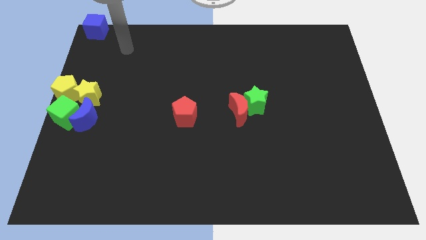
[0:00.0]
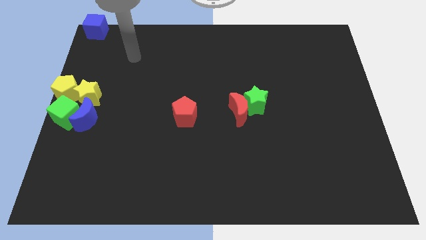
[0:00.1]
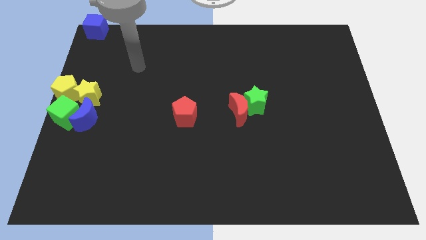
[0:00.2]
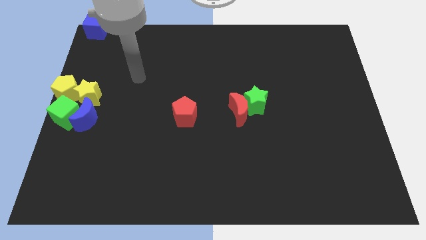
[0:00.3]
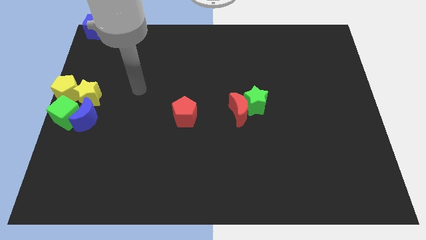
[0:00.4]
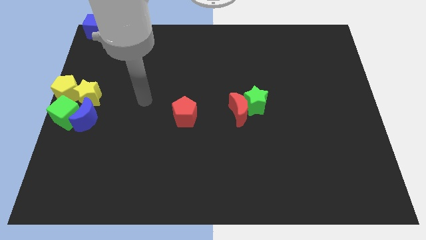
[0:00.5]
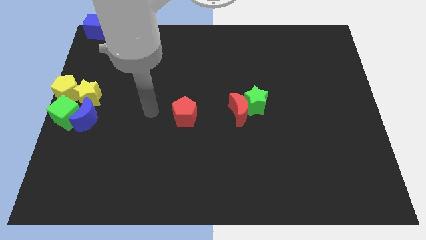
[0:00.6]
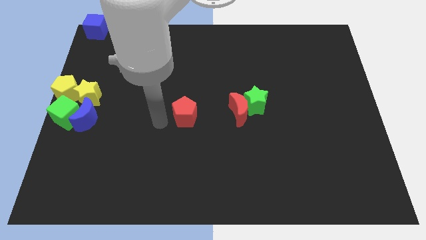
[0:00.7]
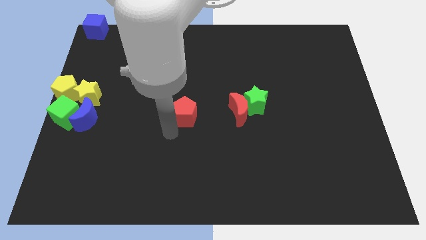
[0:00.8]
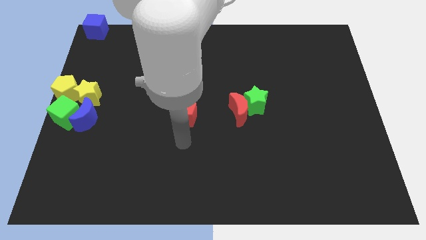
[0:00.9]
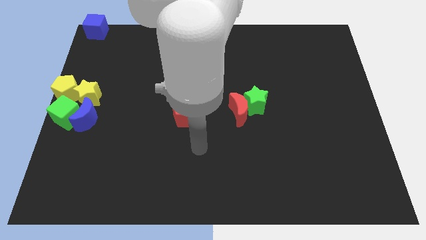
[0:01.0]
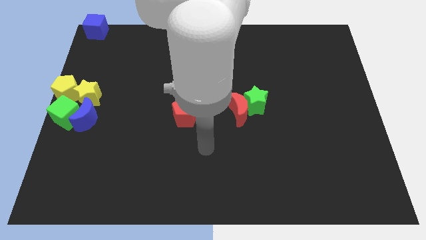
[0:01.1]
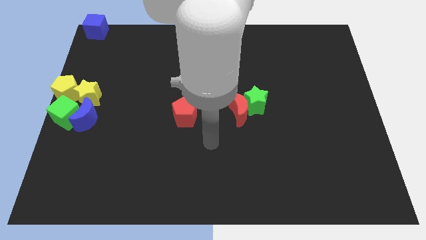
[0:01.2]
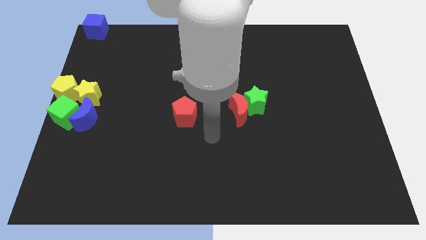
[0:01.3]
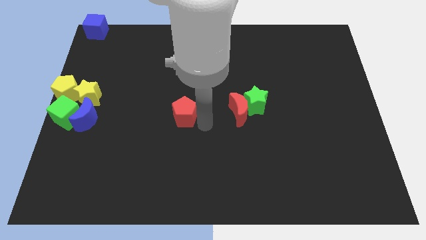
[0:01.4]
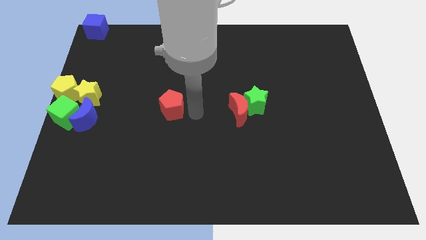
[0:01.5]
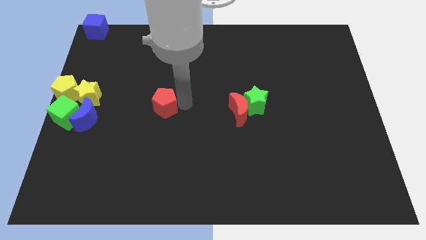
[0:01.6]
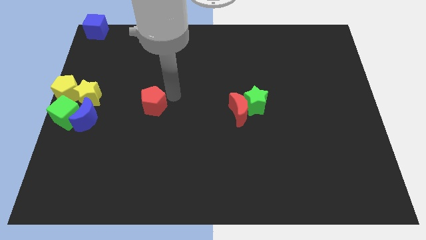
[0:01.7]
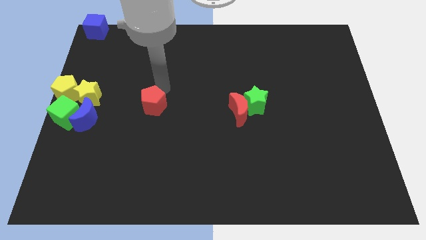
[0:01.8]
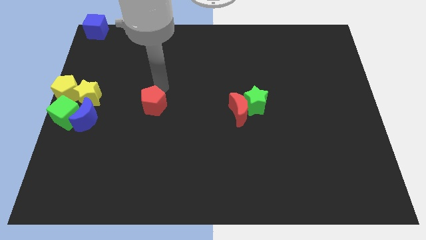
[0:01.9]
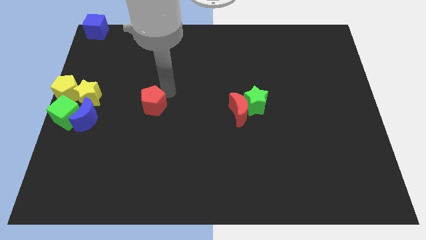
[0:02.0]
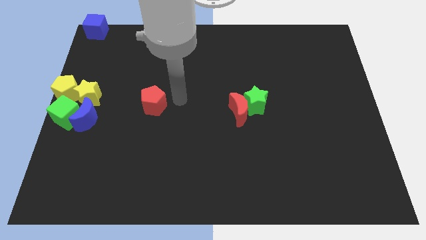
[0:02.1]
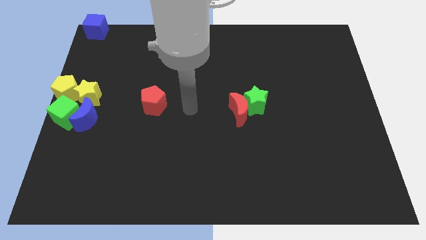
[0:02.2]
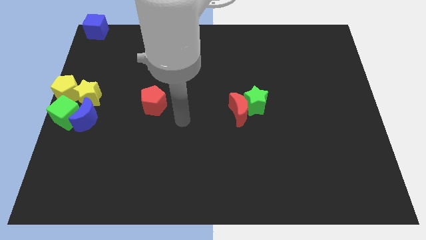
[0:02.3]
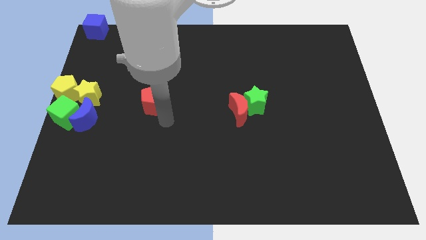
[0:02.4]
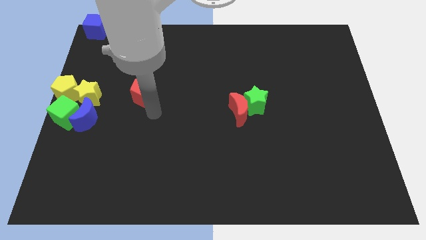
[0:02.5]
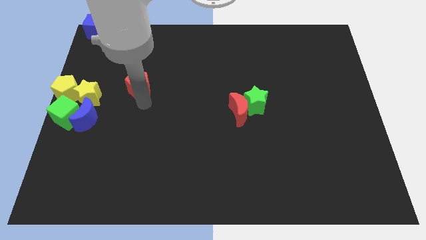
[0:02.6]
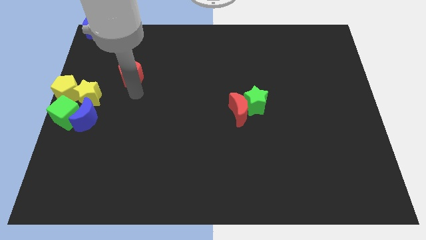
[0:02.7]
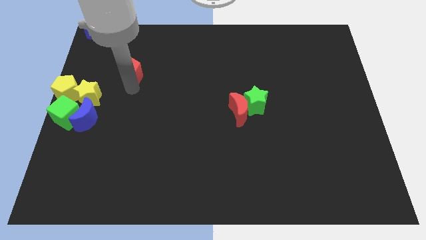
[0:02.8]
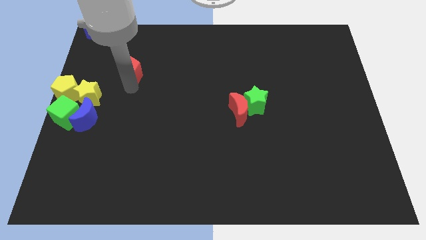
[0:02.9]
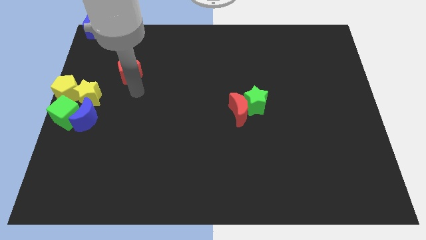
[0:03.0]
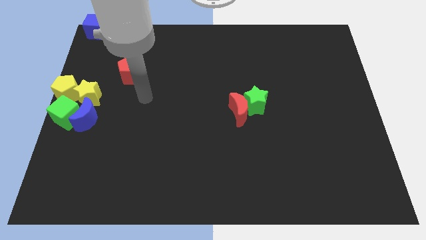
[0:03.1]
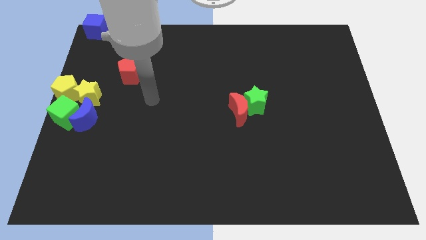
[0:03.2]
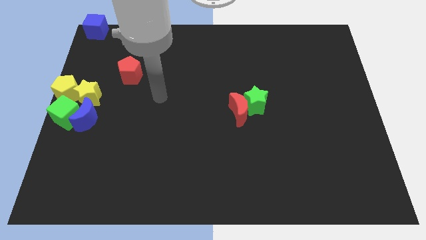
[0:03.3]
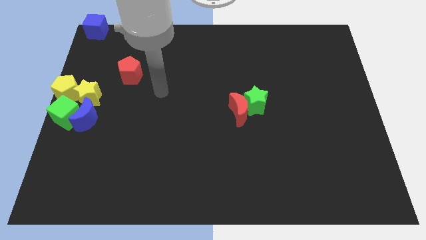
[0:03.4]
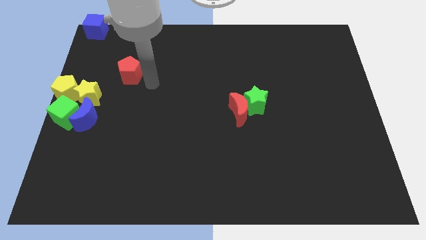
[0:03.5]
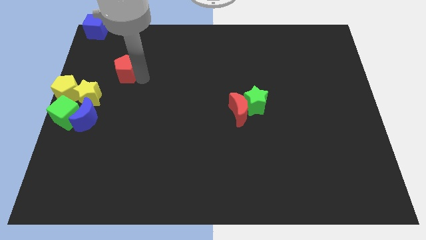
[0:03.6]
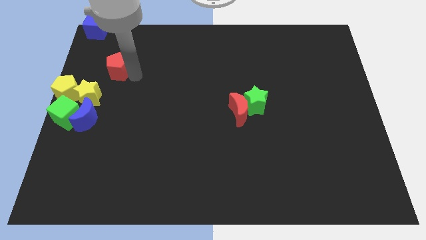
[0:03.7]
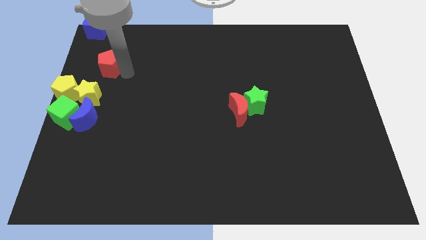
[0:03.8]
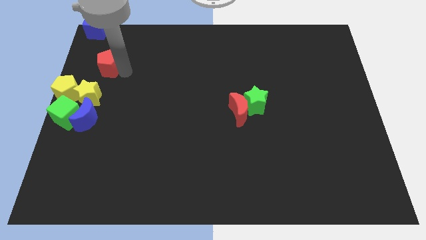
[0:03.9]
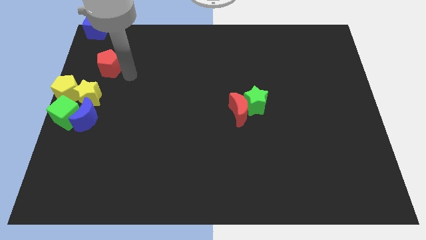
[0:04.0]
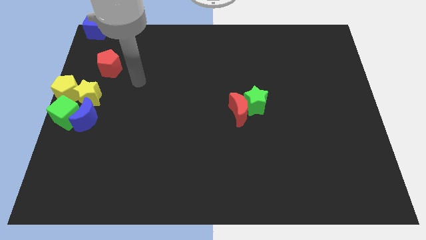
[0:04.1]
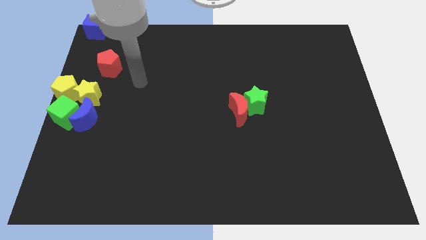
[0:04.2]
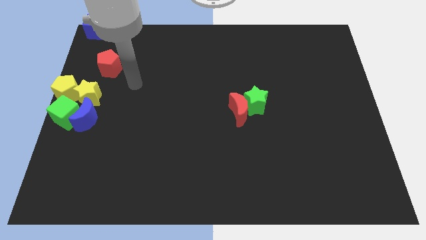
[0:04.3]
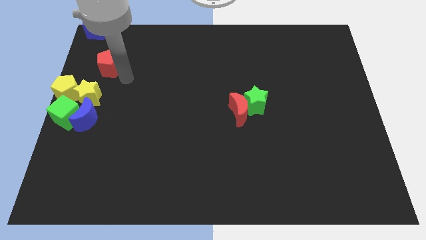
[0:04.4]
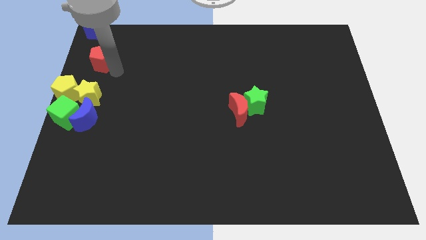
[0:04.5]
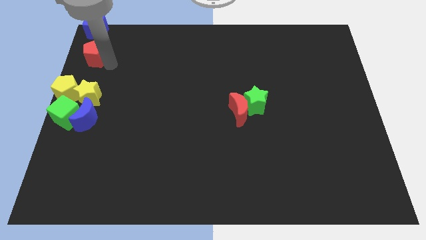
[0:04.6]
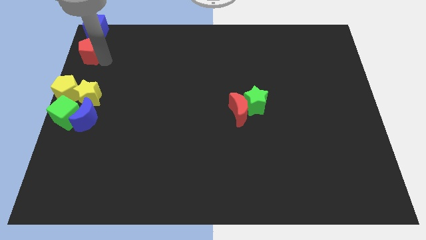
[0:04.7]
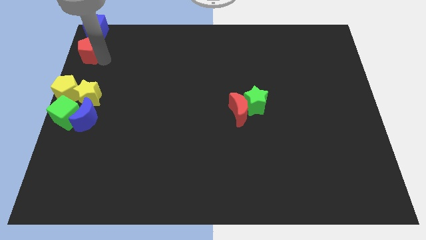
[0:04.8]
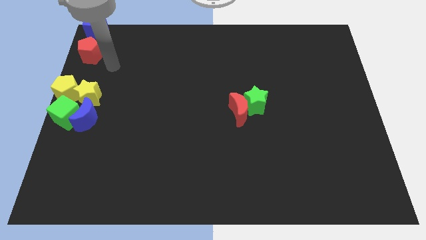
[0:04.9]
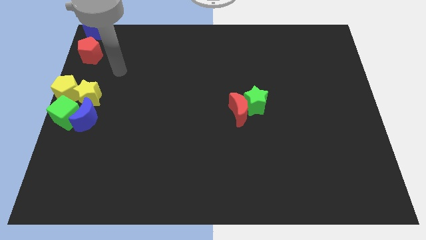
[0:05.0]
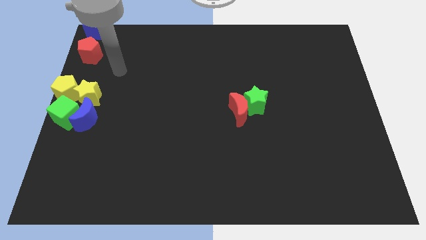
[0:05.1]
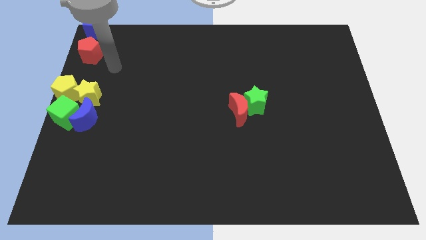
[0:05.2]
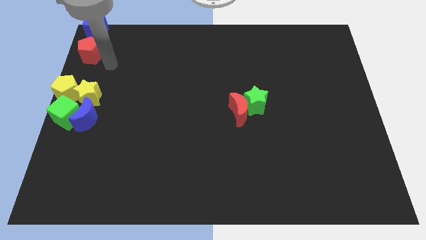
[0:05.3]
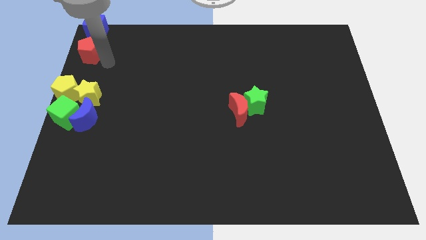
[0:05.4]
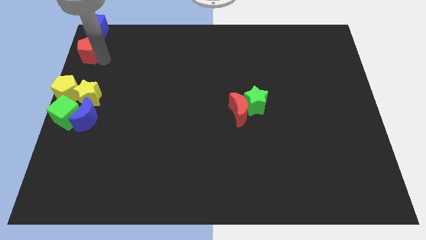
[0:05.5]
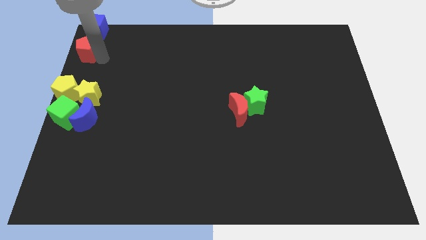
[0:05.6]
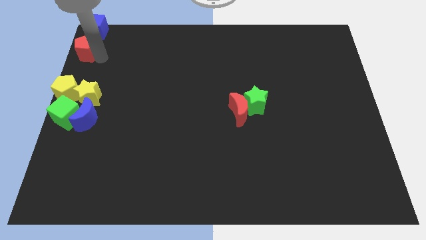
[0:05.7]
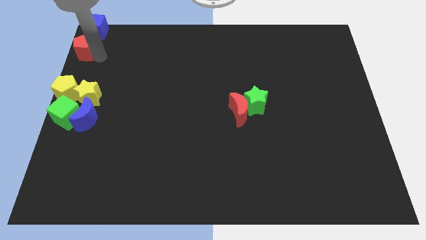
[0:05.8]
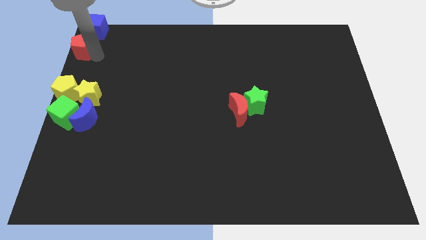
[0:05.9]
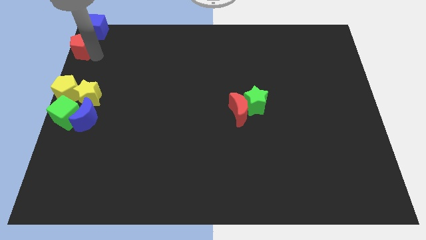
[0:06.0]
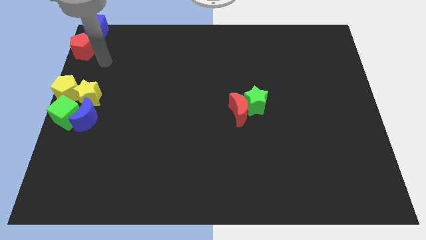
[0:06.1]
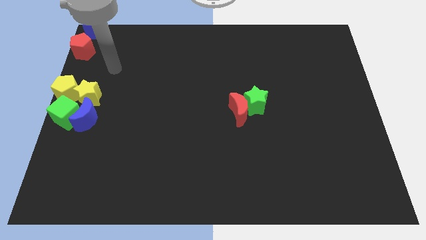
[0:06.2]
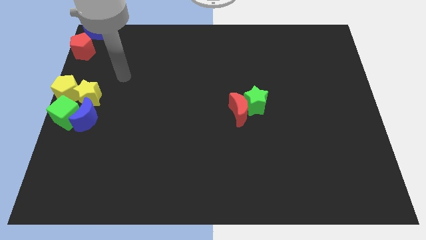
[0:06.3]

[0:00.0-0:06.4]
push the red pentagon to the bottom of the blue cube

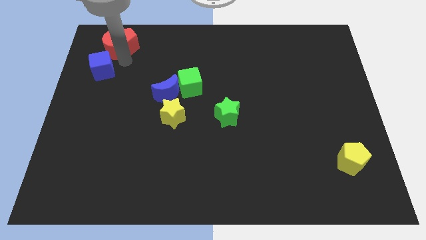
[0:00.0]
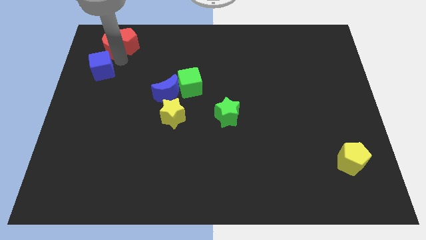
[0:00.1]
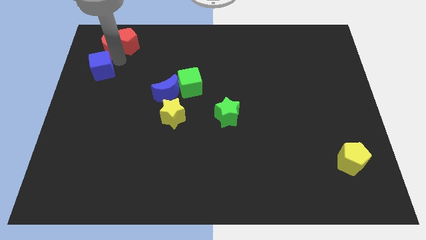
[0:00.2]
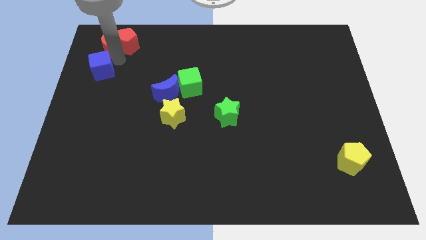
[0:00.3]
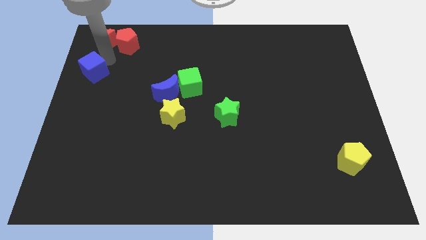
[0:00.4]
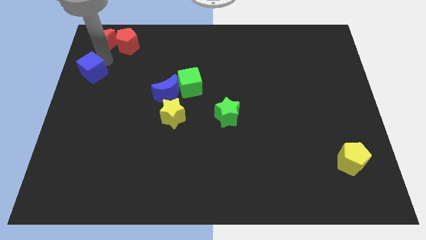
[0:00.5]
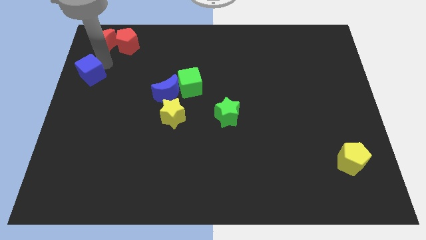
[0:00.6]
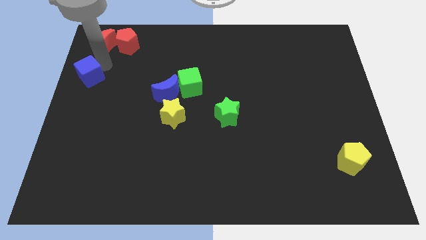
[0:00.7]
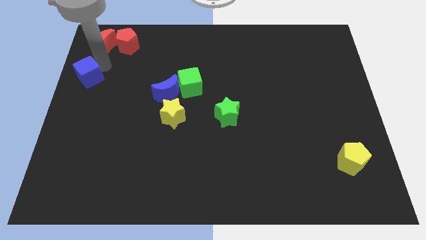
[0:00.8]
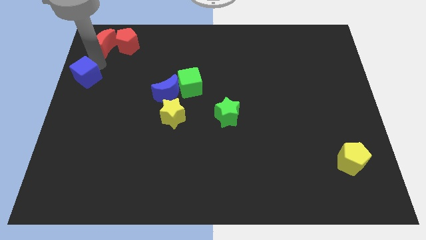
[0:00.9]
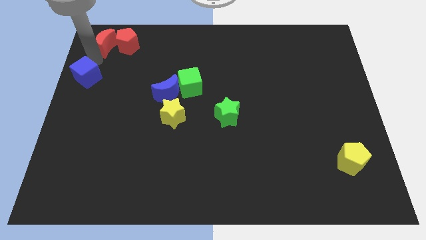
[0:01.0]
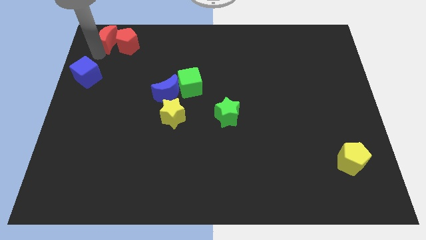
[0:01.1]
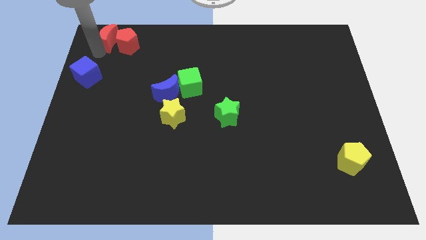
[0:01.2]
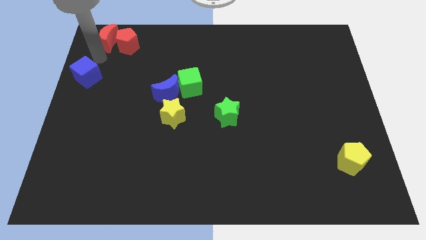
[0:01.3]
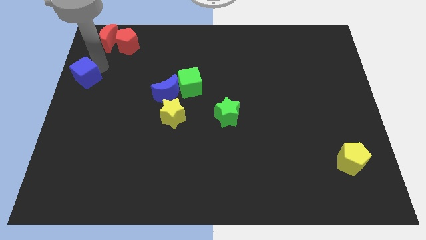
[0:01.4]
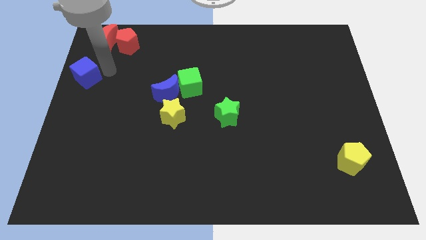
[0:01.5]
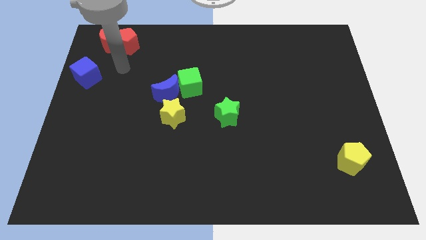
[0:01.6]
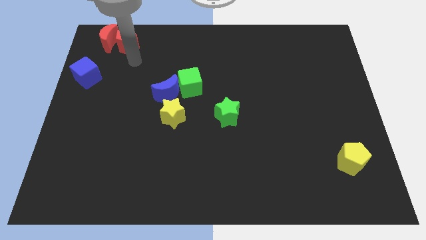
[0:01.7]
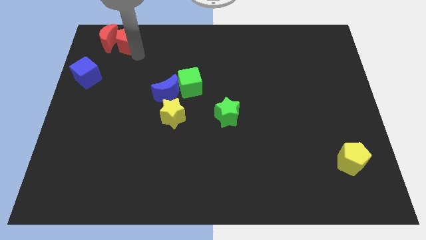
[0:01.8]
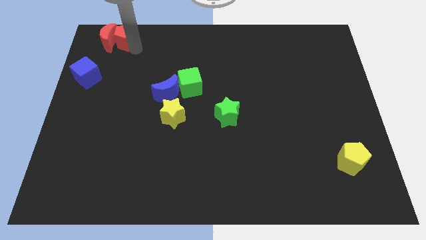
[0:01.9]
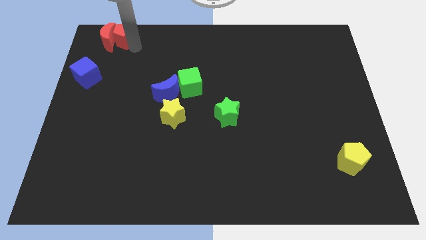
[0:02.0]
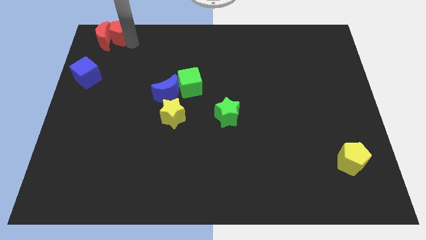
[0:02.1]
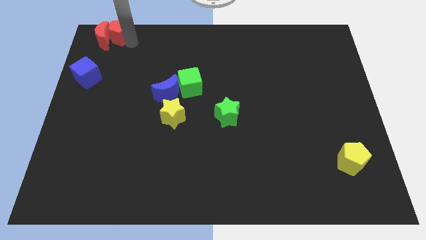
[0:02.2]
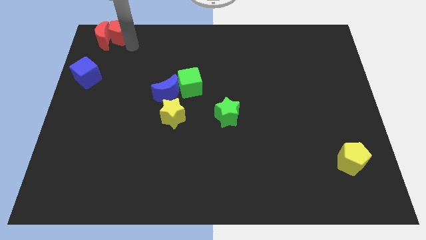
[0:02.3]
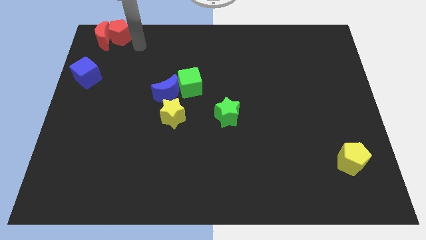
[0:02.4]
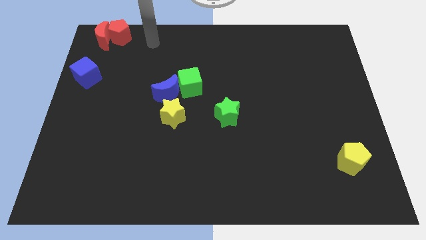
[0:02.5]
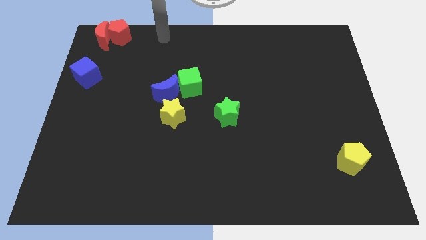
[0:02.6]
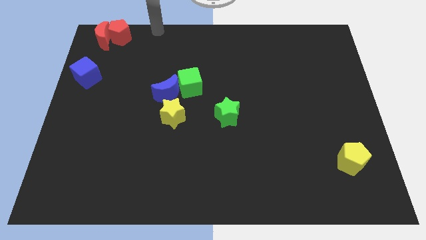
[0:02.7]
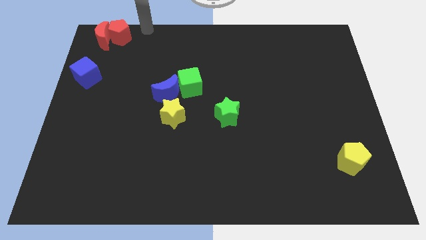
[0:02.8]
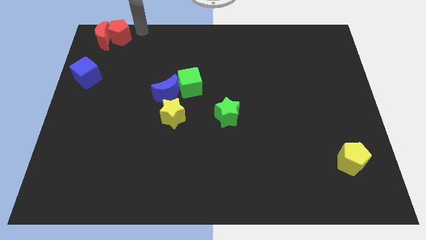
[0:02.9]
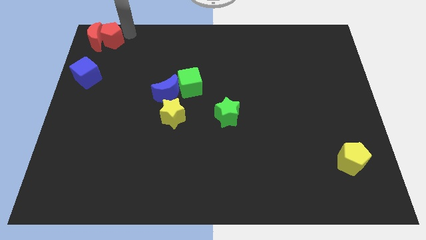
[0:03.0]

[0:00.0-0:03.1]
separate blue cube and red blocks from each other
